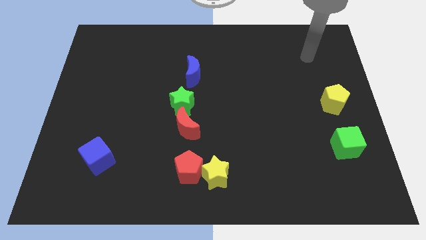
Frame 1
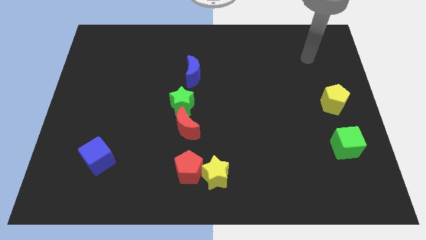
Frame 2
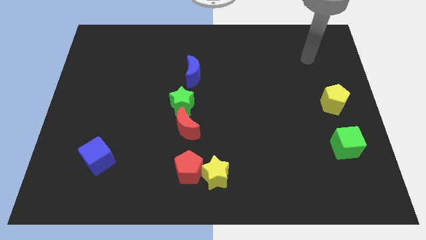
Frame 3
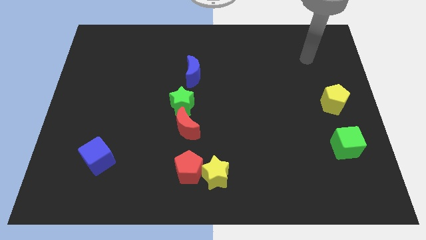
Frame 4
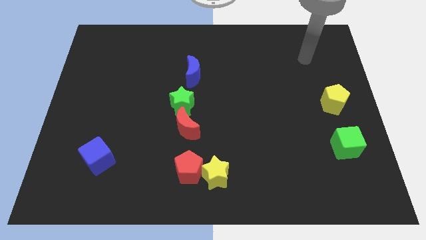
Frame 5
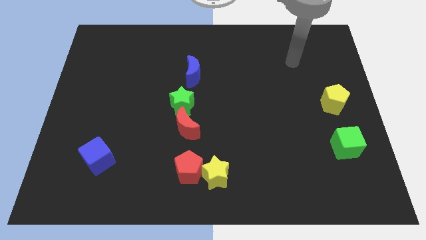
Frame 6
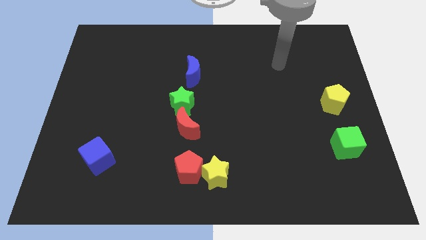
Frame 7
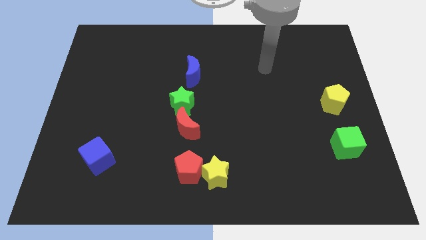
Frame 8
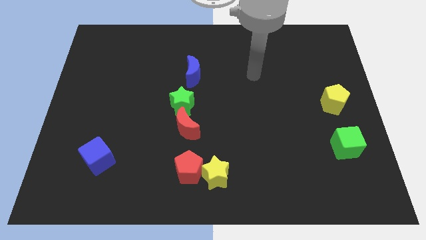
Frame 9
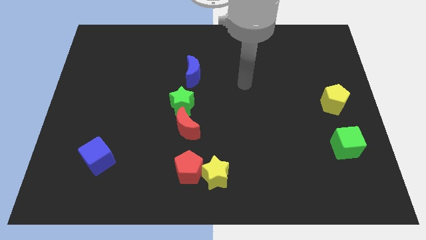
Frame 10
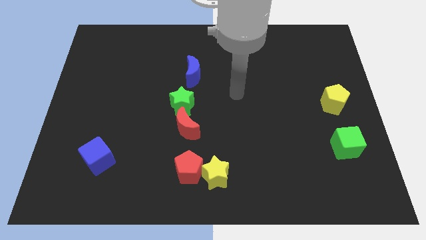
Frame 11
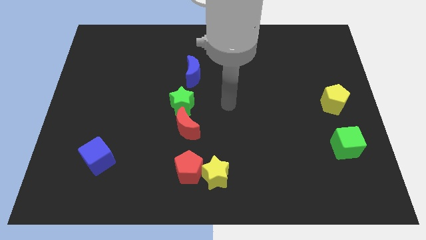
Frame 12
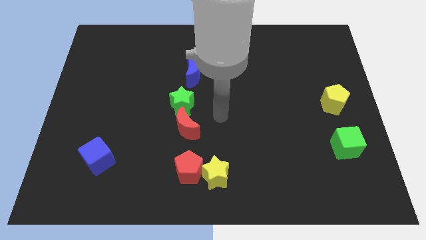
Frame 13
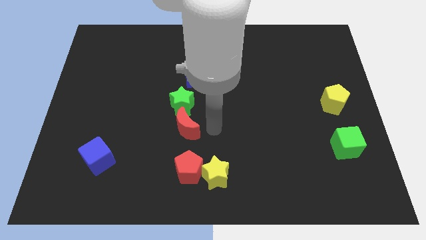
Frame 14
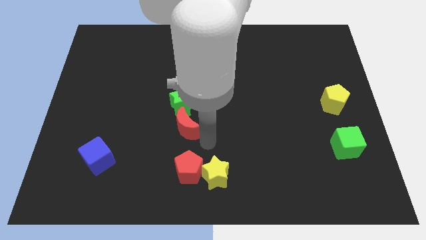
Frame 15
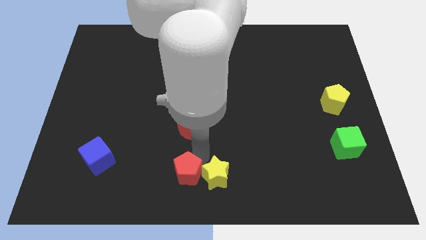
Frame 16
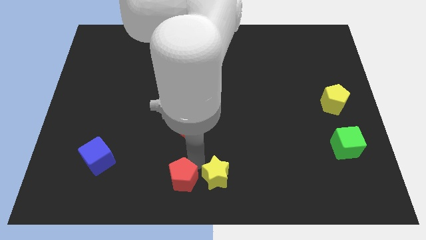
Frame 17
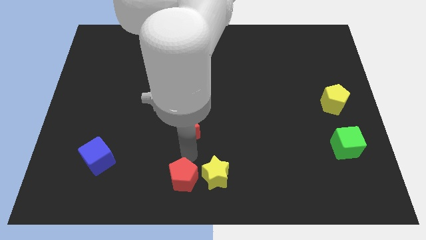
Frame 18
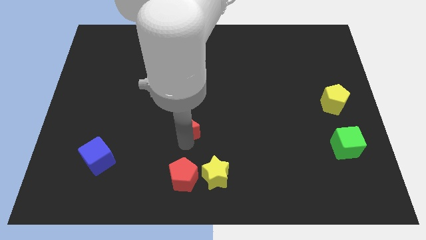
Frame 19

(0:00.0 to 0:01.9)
slide the red pentagon to the bottom

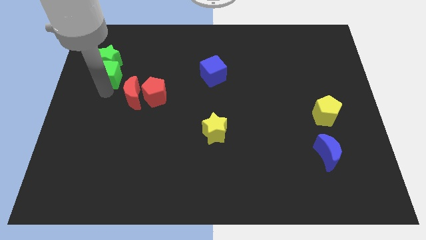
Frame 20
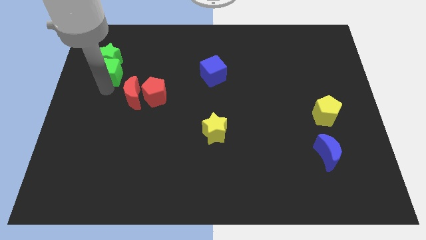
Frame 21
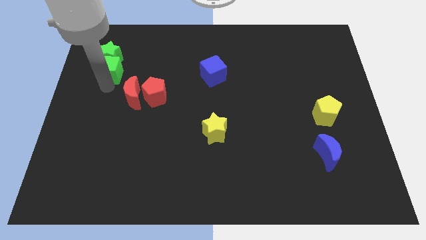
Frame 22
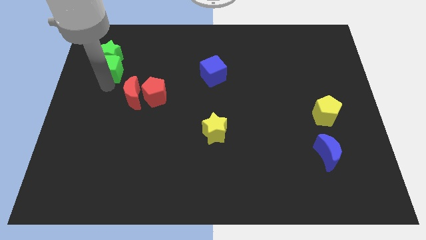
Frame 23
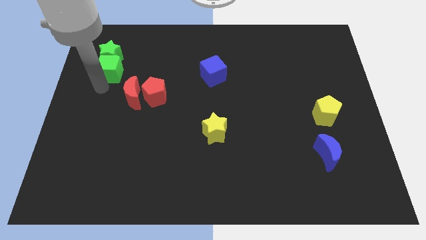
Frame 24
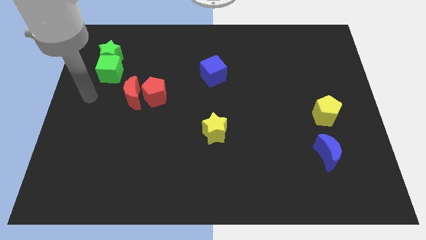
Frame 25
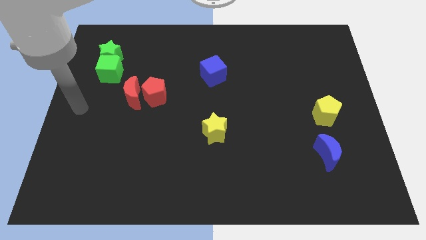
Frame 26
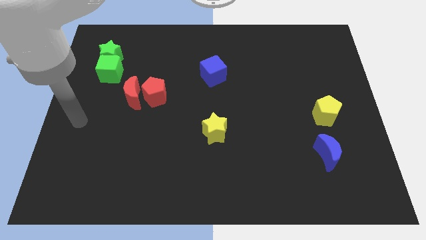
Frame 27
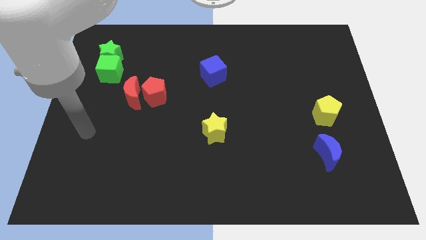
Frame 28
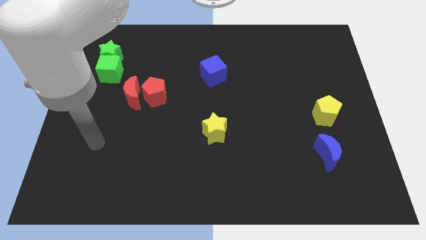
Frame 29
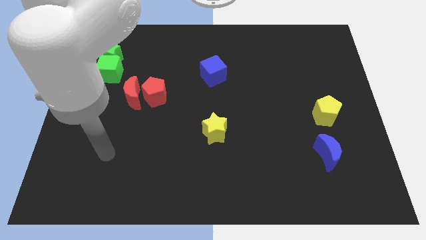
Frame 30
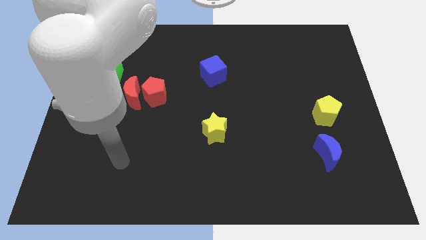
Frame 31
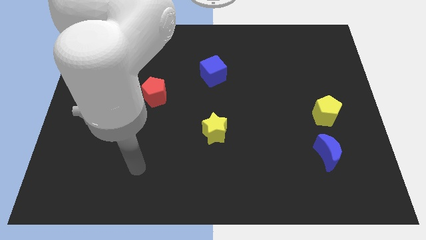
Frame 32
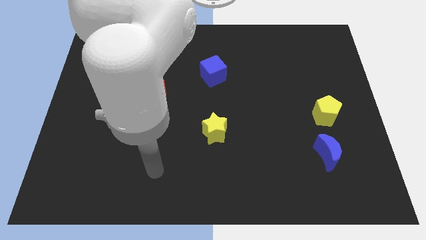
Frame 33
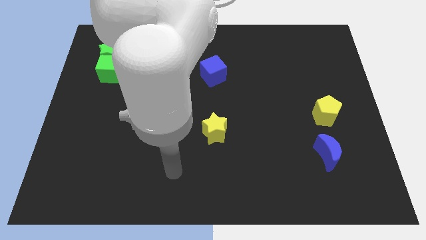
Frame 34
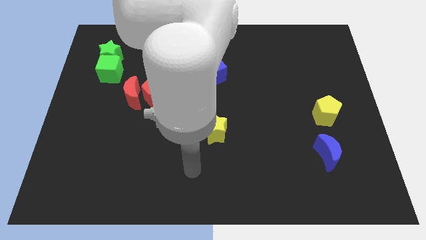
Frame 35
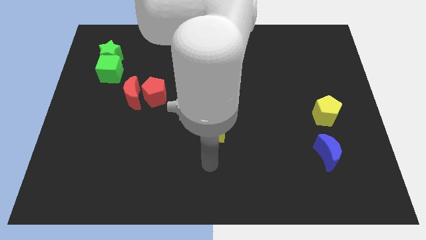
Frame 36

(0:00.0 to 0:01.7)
slightly push the green blocks towards the top left corner

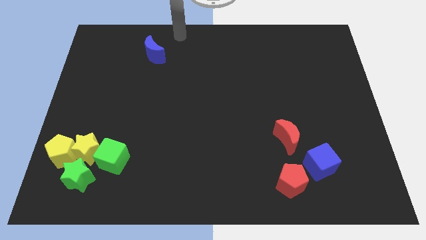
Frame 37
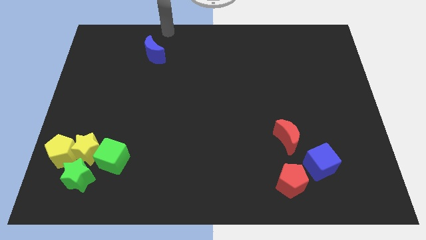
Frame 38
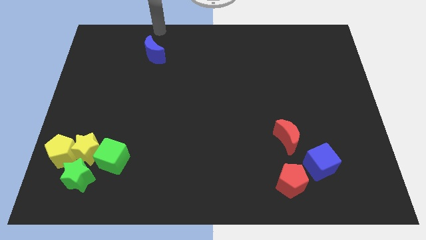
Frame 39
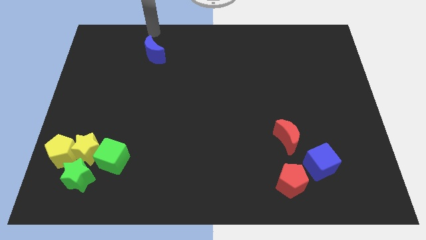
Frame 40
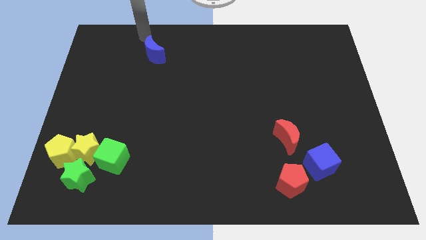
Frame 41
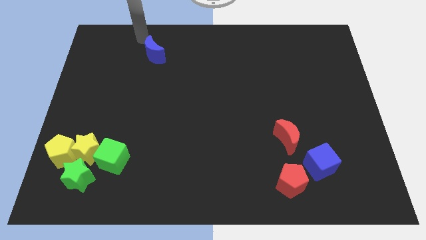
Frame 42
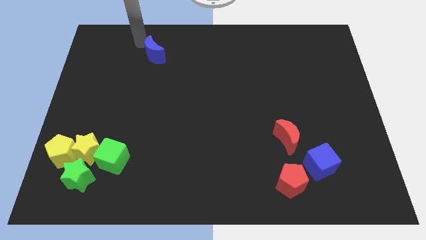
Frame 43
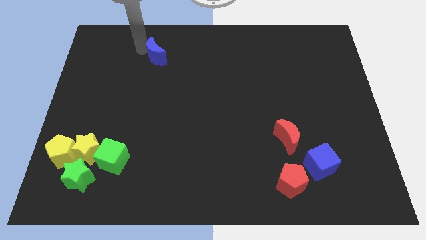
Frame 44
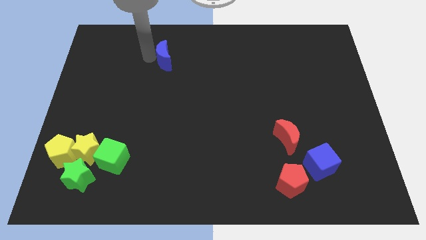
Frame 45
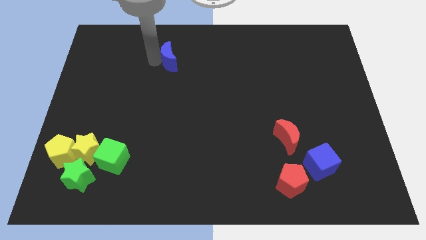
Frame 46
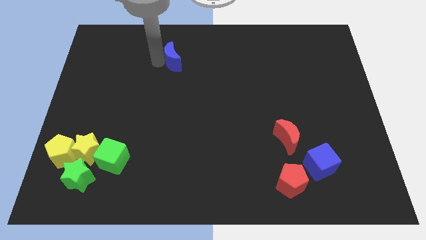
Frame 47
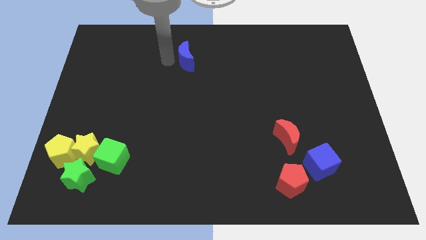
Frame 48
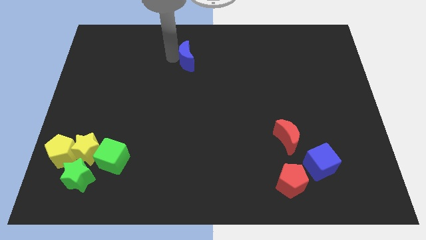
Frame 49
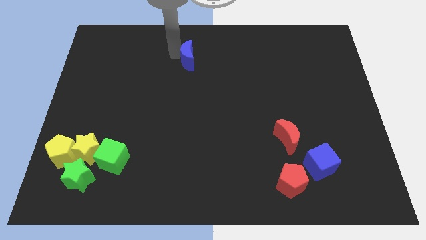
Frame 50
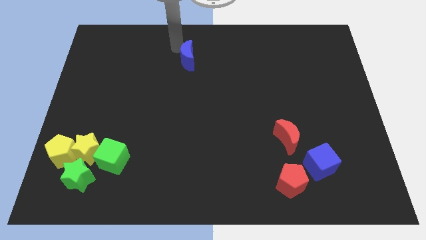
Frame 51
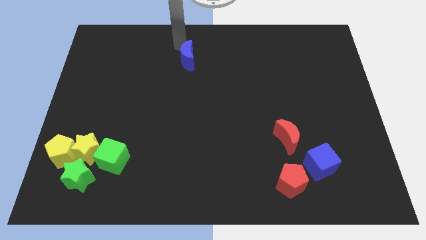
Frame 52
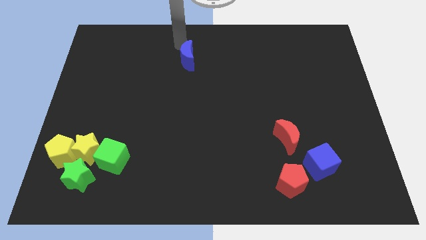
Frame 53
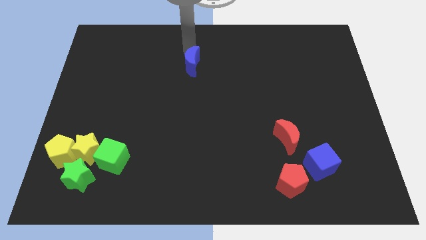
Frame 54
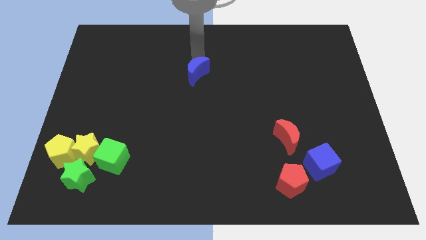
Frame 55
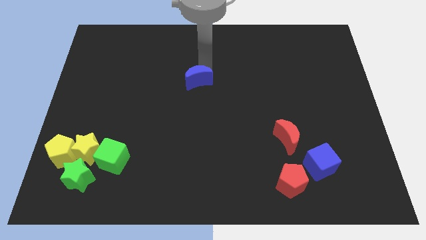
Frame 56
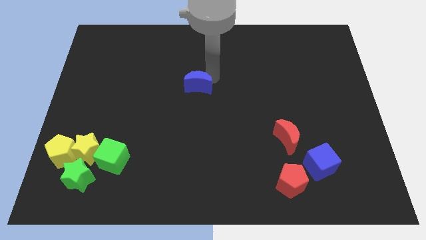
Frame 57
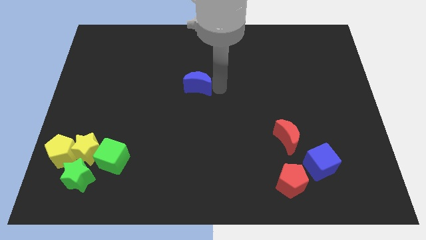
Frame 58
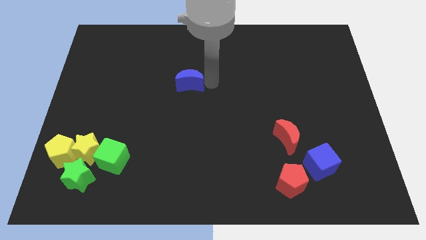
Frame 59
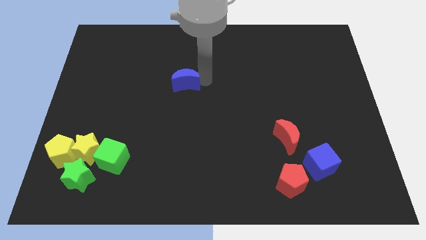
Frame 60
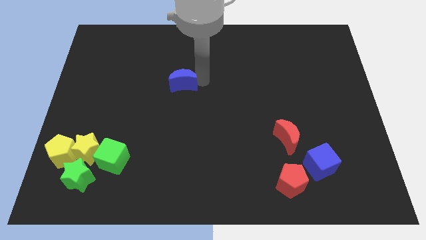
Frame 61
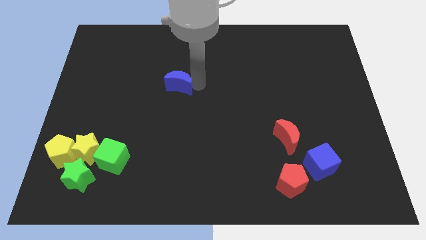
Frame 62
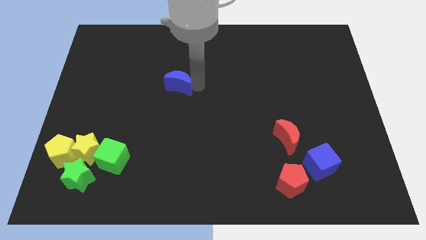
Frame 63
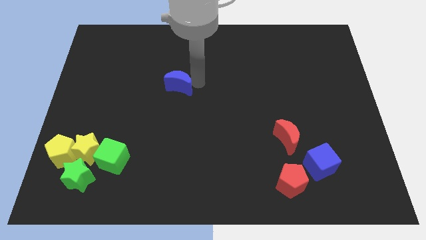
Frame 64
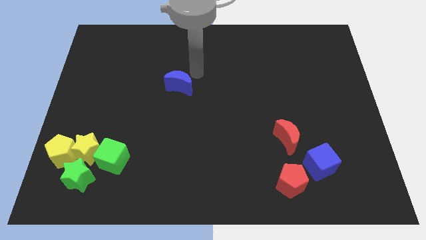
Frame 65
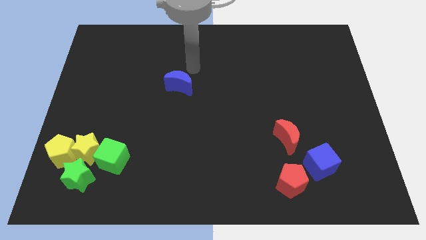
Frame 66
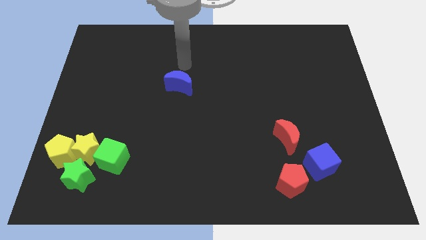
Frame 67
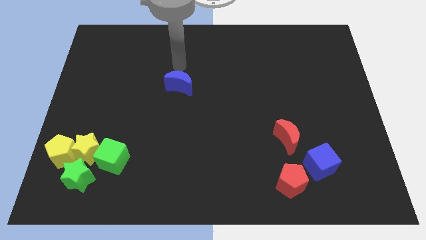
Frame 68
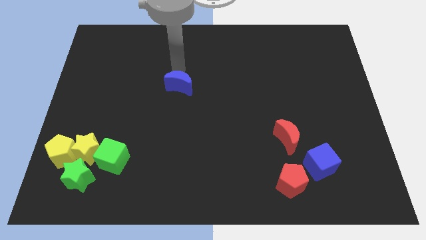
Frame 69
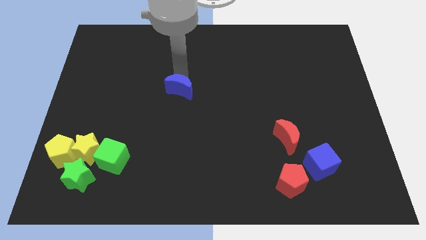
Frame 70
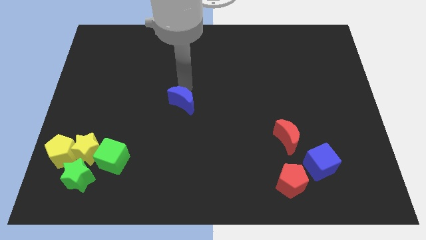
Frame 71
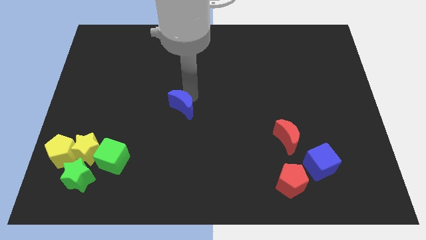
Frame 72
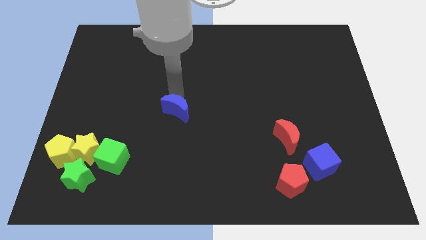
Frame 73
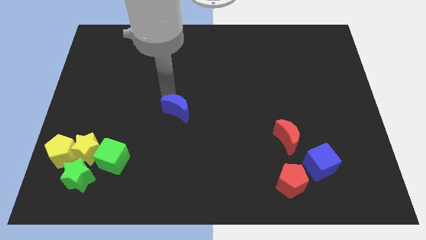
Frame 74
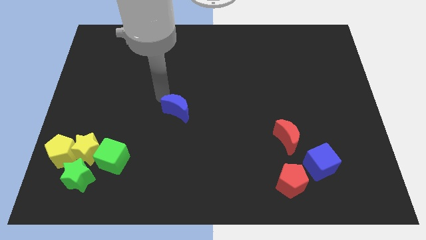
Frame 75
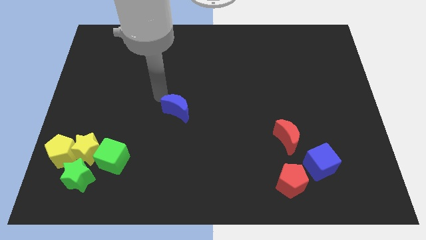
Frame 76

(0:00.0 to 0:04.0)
push the blue crescent towards the bottom center of the board

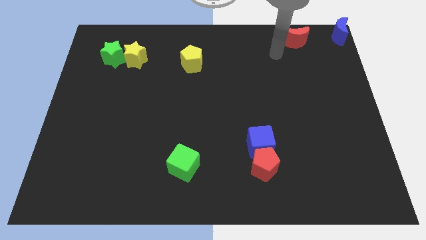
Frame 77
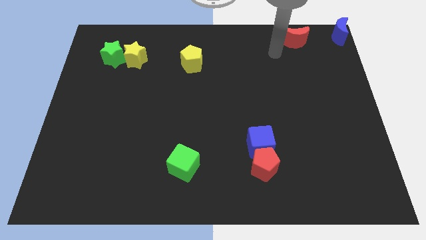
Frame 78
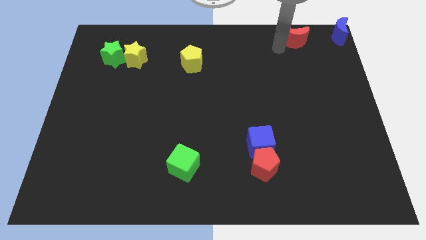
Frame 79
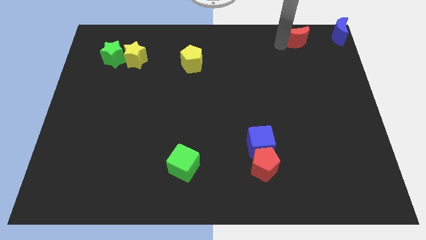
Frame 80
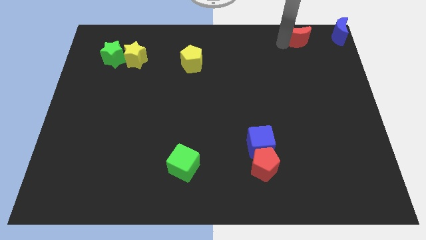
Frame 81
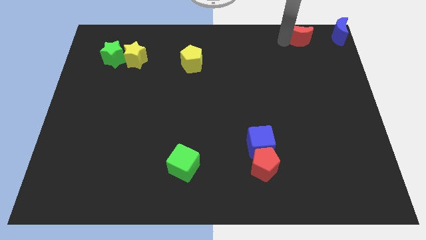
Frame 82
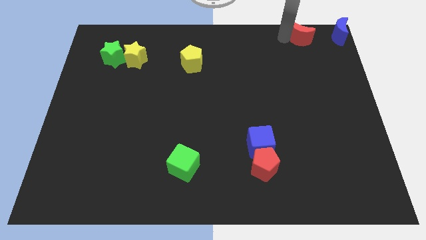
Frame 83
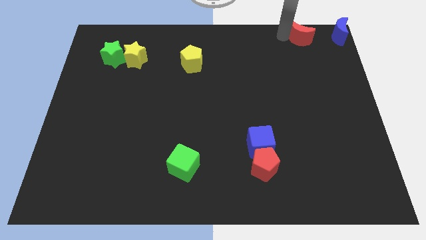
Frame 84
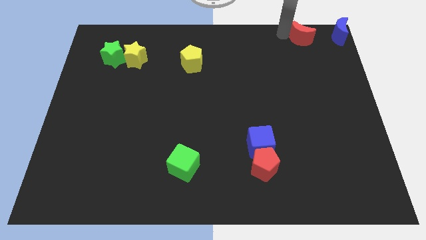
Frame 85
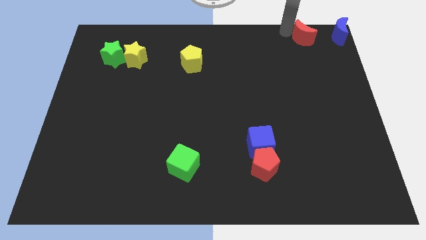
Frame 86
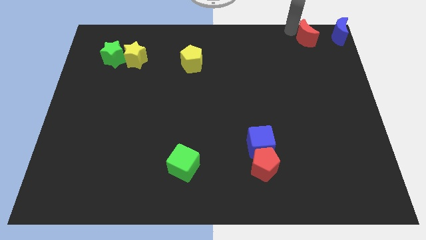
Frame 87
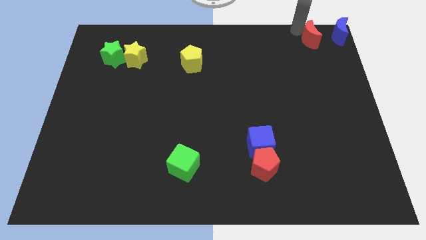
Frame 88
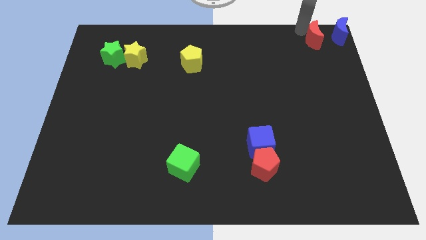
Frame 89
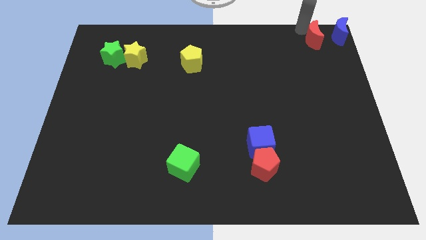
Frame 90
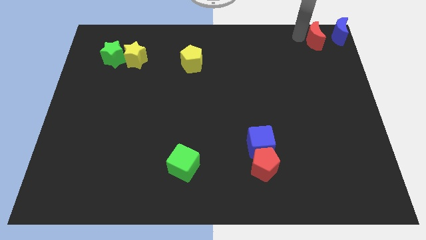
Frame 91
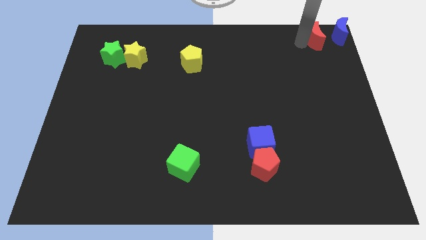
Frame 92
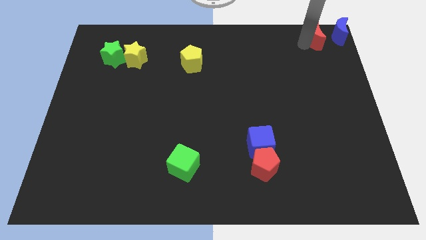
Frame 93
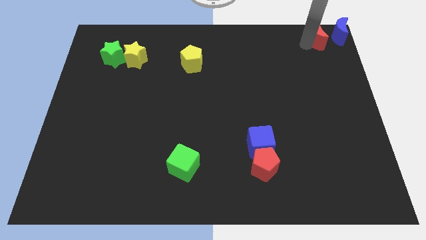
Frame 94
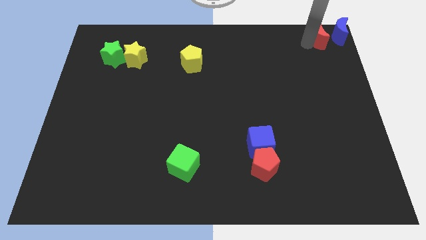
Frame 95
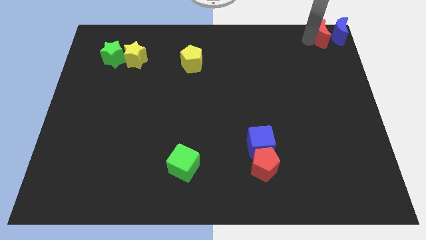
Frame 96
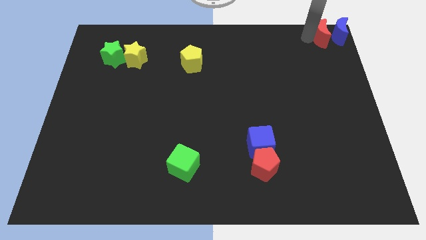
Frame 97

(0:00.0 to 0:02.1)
move red moon to the top right
